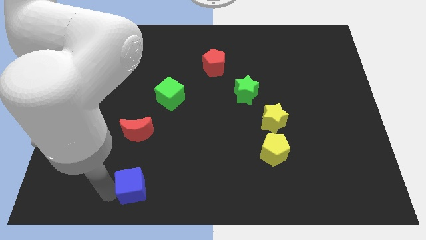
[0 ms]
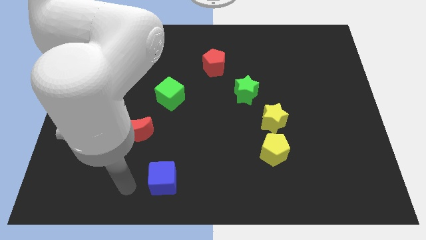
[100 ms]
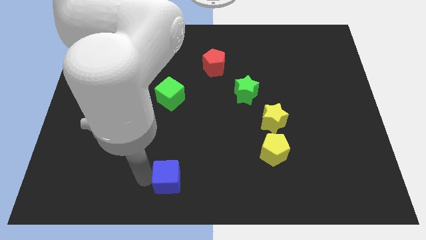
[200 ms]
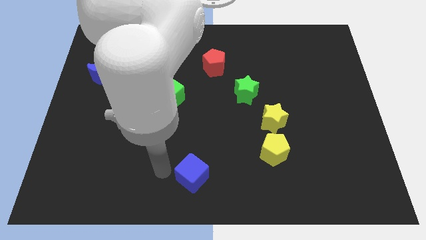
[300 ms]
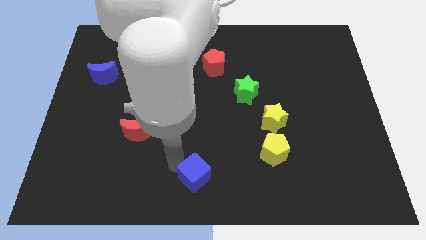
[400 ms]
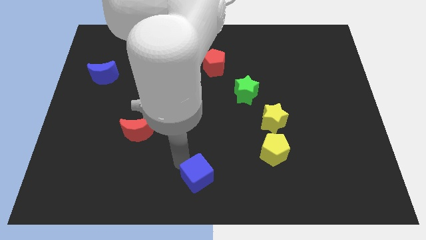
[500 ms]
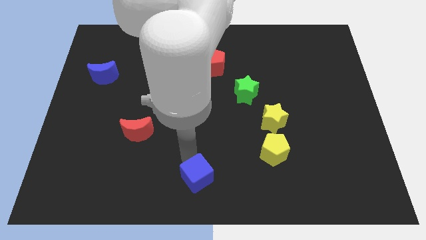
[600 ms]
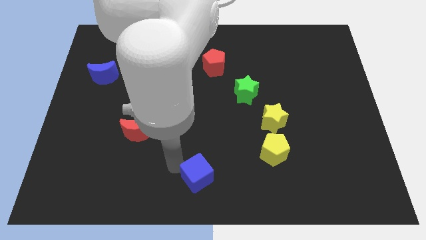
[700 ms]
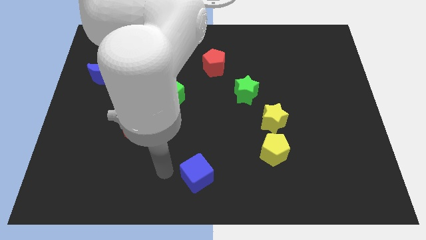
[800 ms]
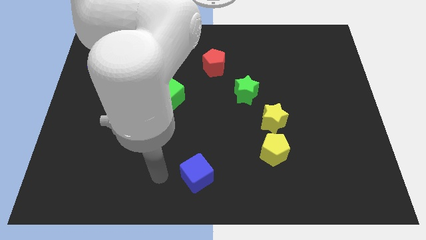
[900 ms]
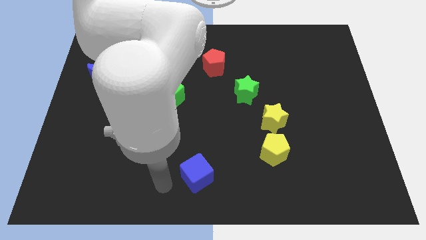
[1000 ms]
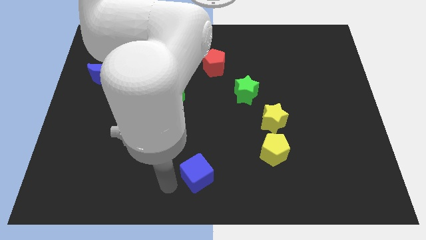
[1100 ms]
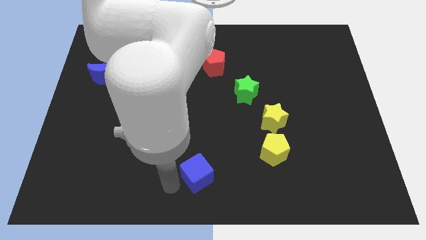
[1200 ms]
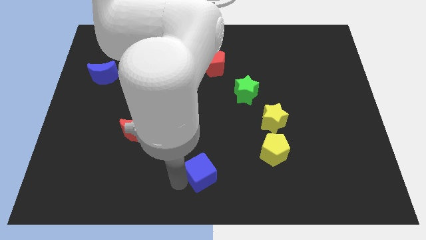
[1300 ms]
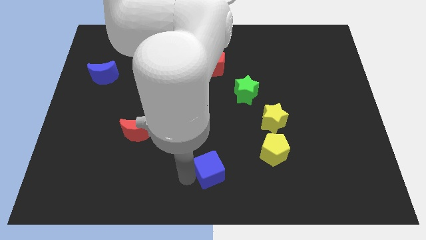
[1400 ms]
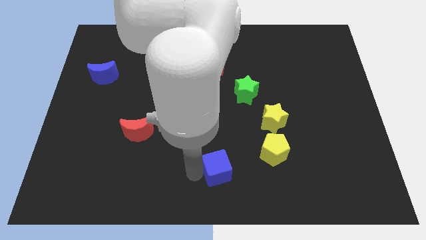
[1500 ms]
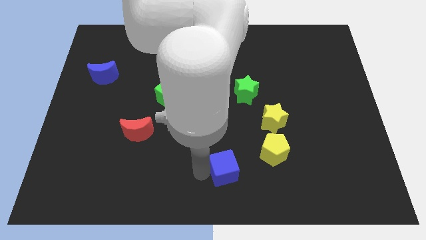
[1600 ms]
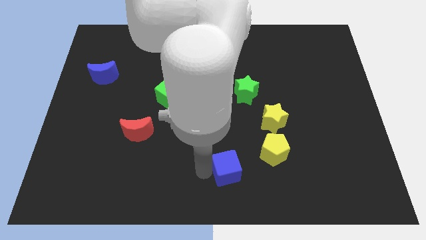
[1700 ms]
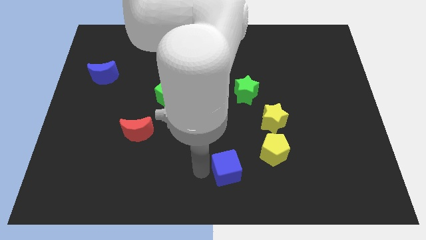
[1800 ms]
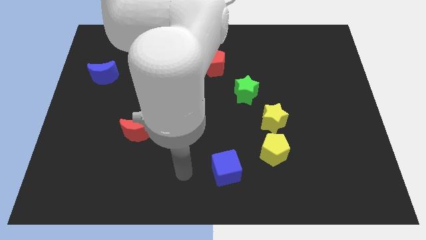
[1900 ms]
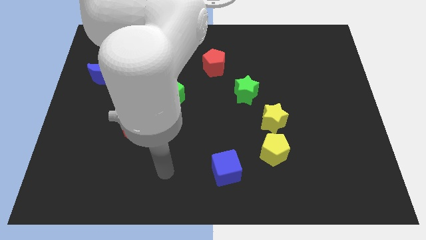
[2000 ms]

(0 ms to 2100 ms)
place the blue cube to the left of the yellow pentagon

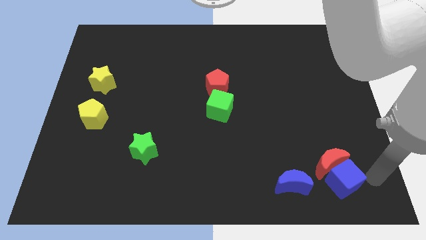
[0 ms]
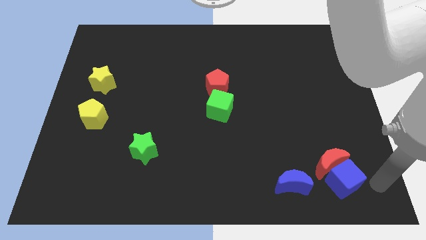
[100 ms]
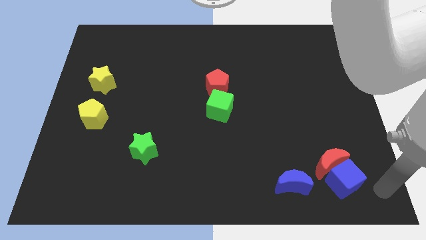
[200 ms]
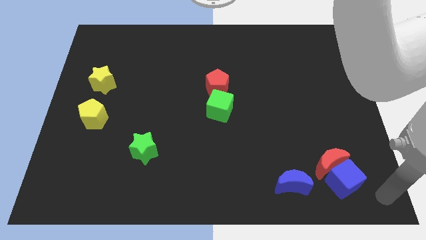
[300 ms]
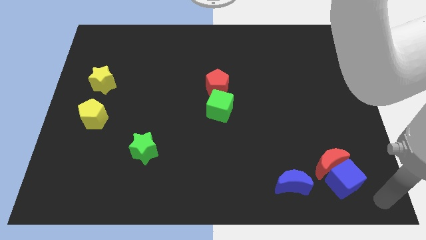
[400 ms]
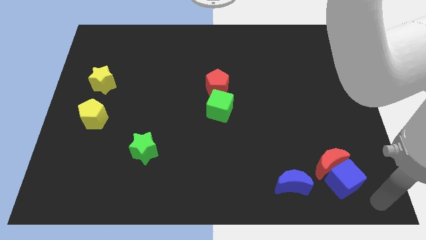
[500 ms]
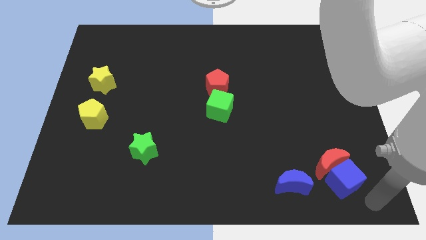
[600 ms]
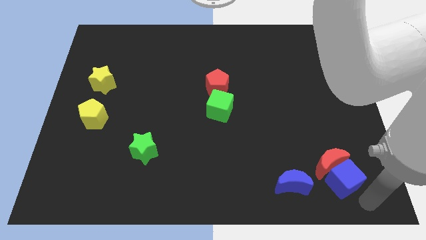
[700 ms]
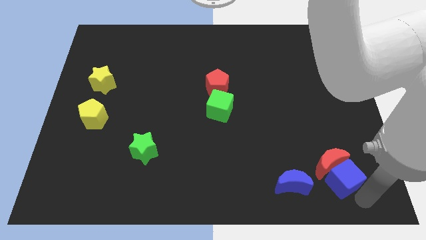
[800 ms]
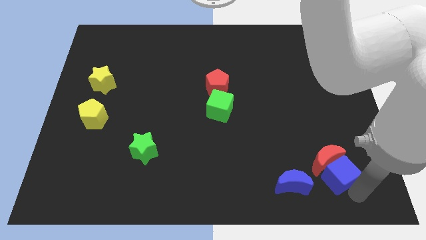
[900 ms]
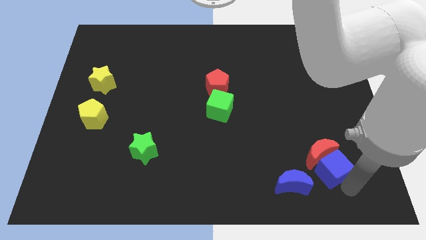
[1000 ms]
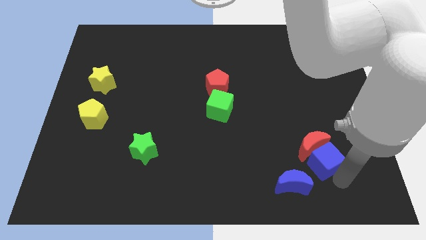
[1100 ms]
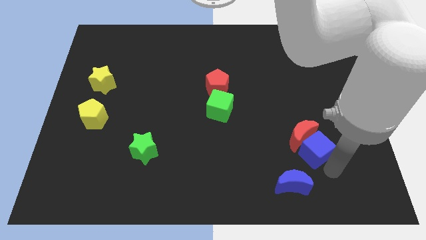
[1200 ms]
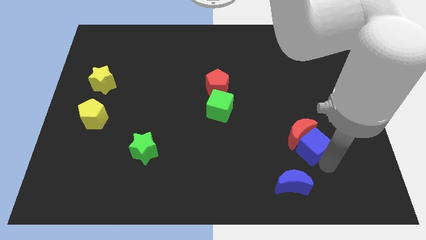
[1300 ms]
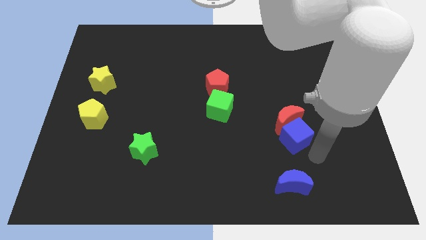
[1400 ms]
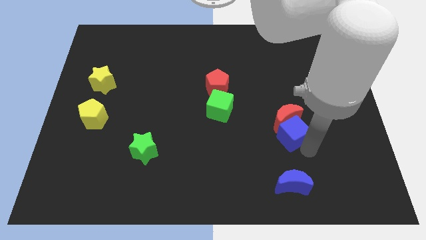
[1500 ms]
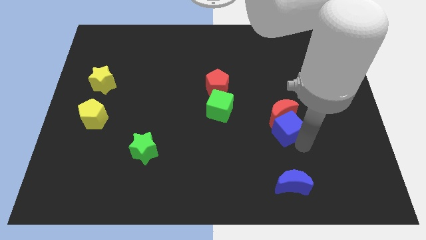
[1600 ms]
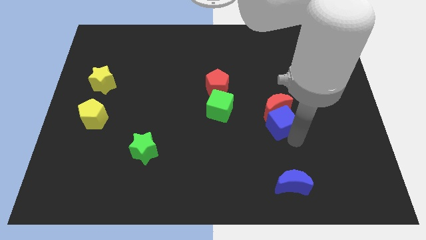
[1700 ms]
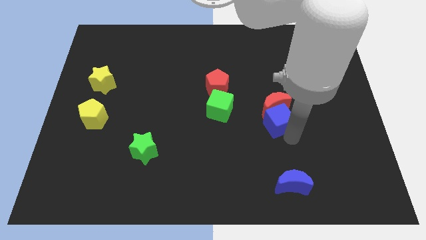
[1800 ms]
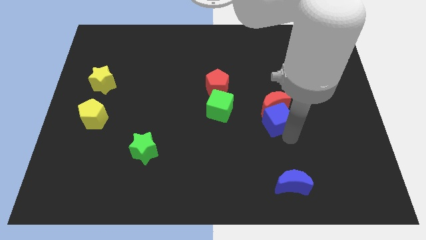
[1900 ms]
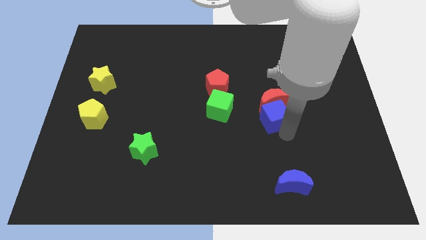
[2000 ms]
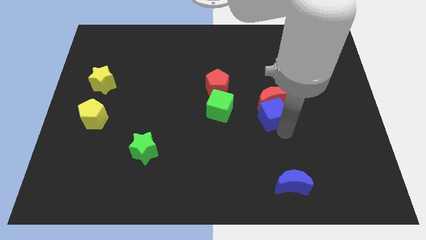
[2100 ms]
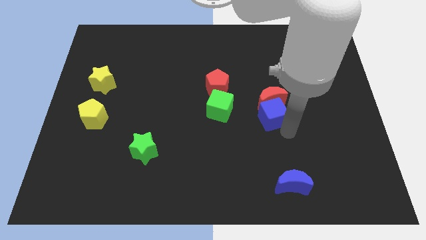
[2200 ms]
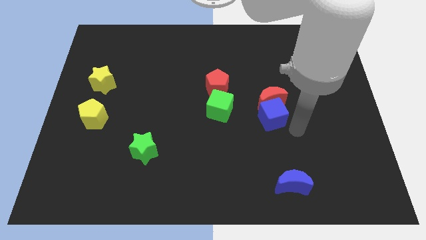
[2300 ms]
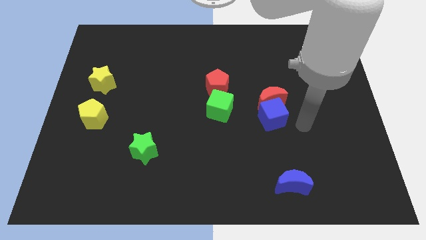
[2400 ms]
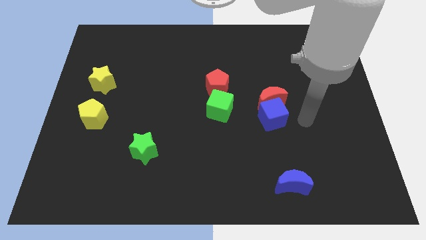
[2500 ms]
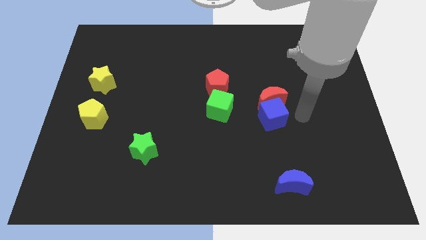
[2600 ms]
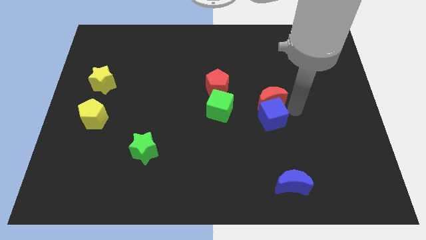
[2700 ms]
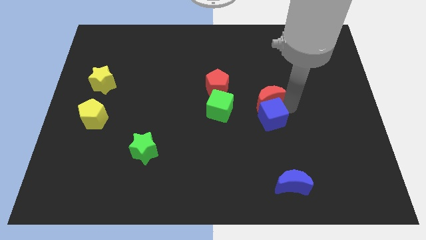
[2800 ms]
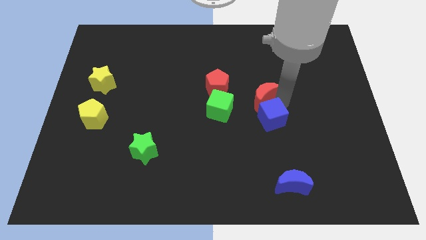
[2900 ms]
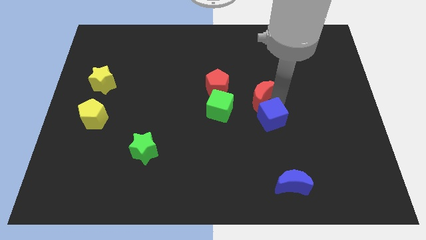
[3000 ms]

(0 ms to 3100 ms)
push the blue cube and red crescent to the right side of green cube

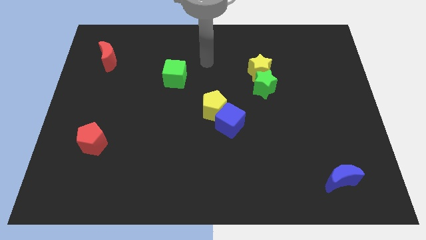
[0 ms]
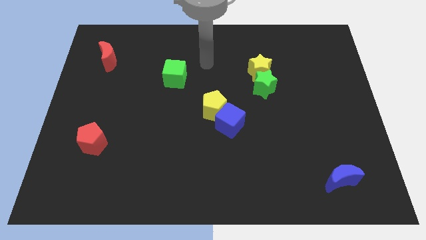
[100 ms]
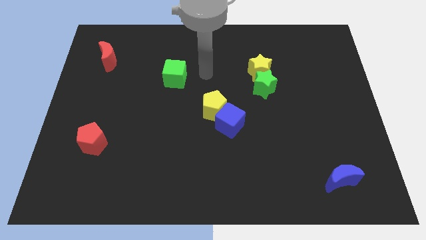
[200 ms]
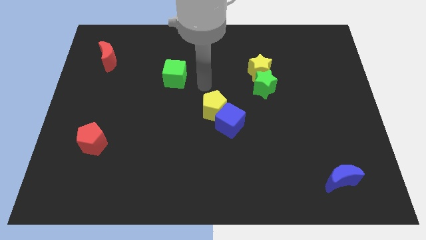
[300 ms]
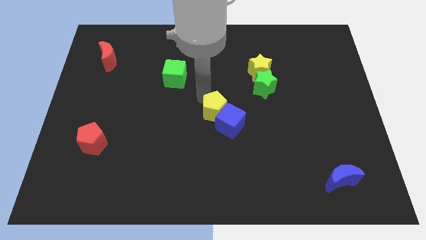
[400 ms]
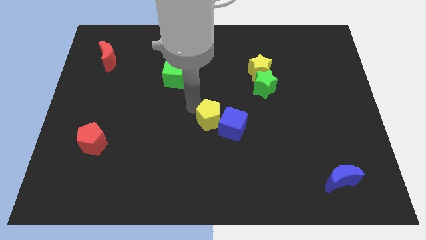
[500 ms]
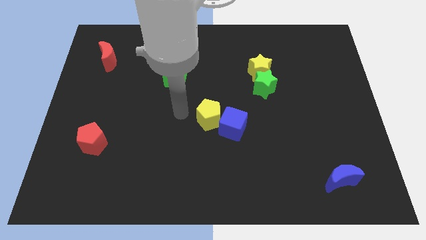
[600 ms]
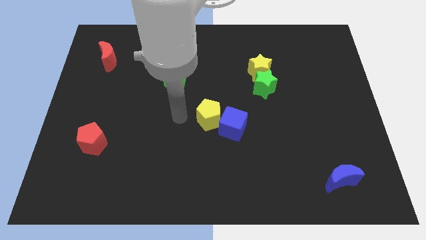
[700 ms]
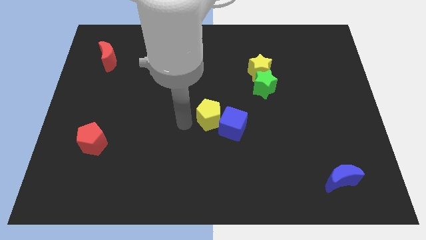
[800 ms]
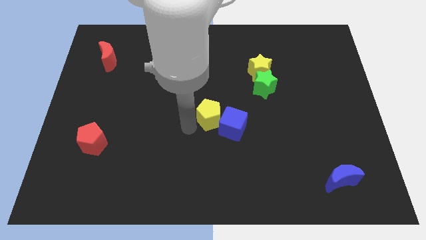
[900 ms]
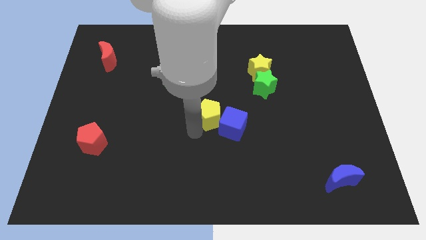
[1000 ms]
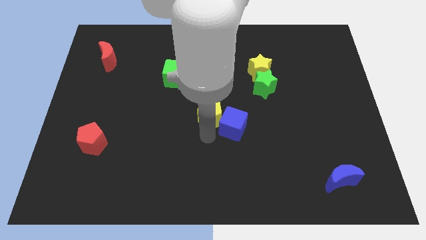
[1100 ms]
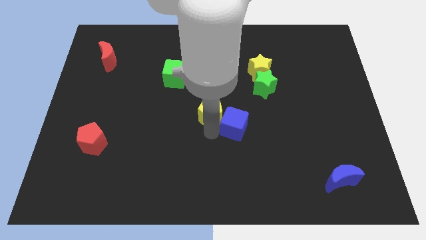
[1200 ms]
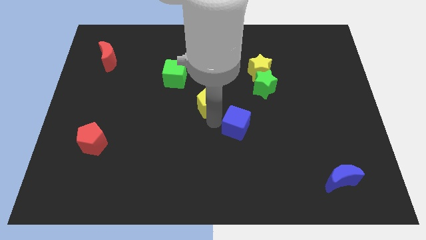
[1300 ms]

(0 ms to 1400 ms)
go and separate the yellow pentagon from the blue cube

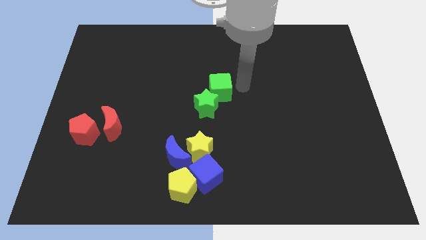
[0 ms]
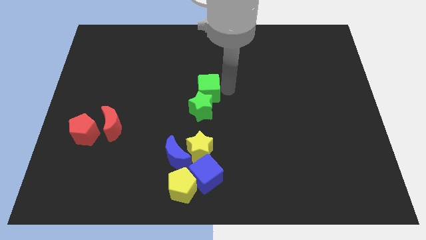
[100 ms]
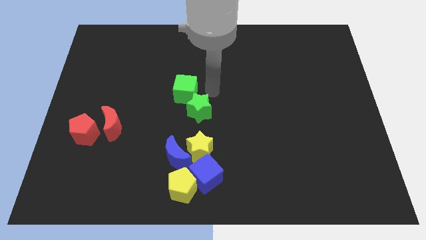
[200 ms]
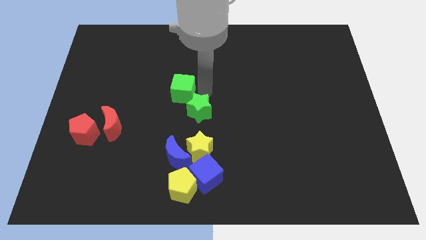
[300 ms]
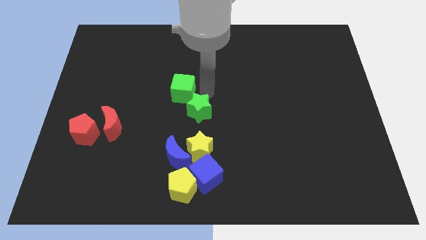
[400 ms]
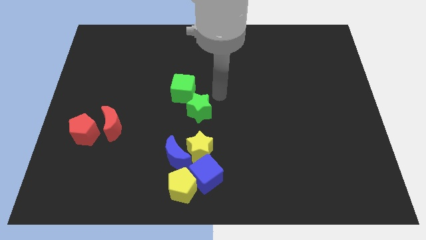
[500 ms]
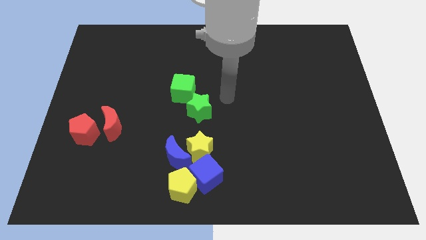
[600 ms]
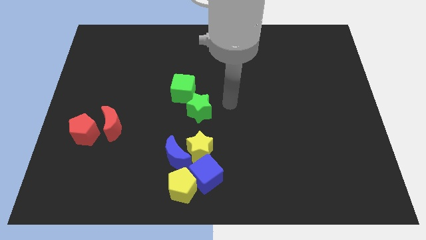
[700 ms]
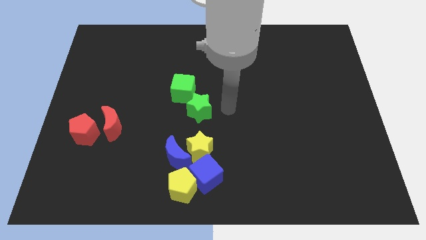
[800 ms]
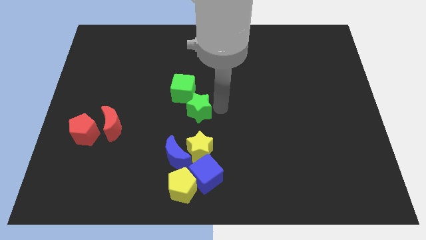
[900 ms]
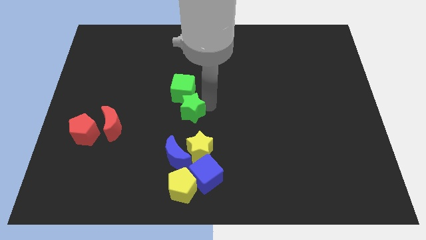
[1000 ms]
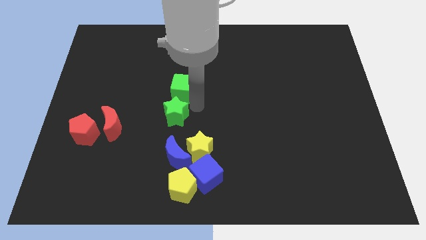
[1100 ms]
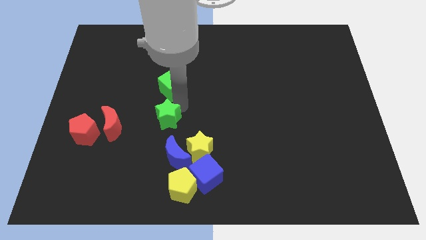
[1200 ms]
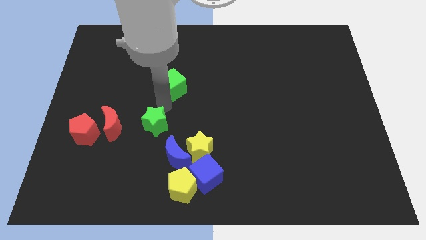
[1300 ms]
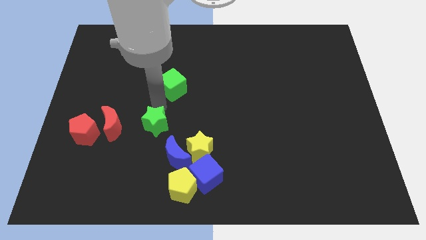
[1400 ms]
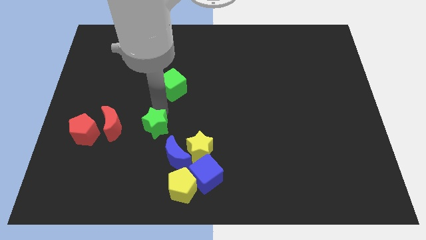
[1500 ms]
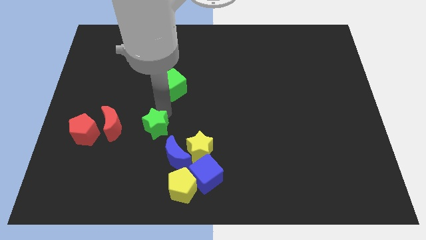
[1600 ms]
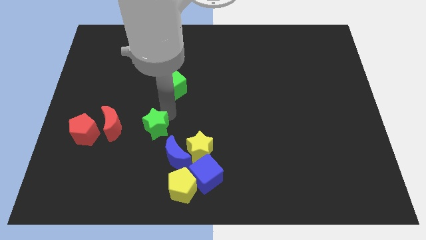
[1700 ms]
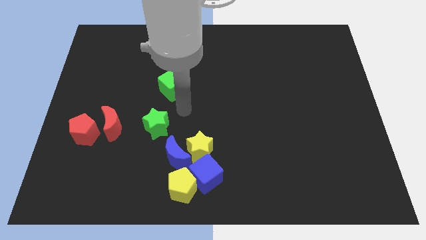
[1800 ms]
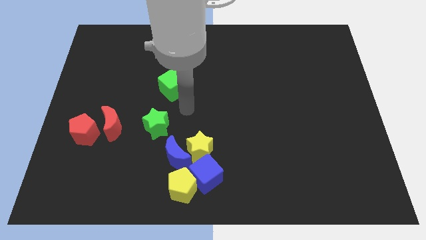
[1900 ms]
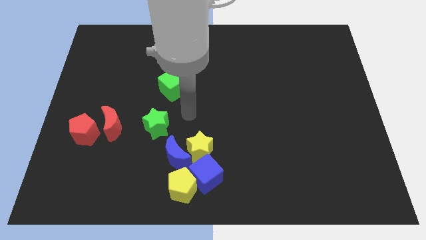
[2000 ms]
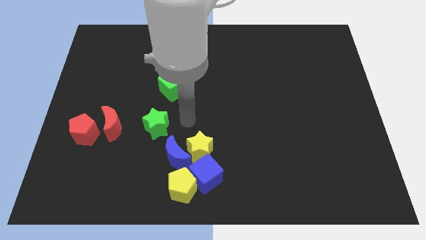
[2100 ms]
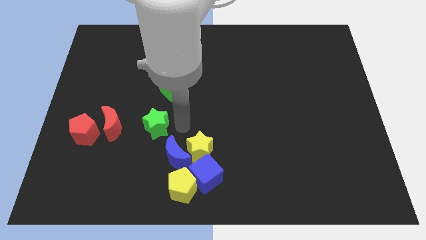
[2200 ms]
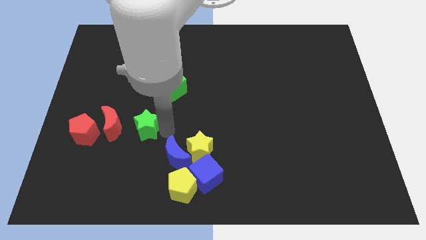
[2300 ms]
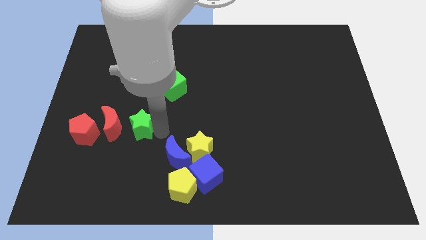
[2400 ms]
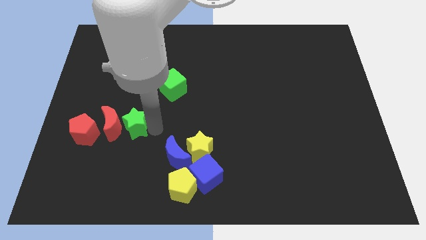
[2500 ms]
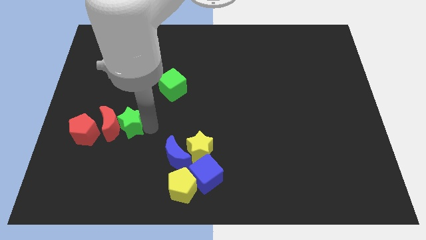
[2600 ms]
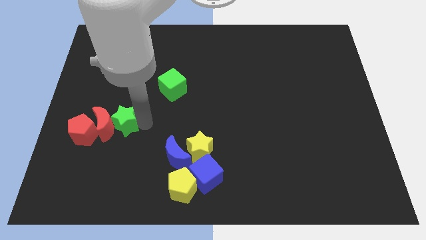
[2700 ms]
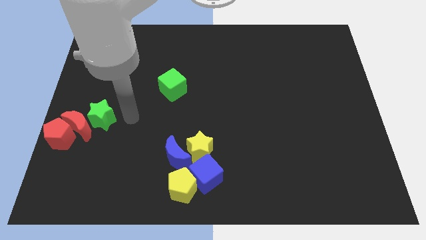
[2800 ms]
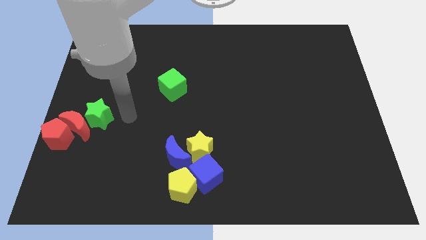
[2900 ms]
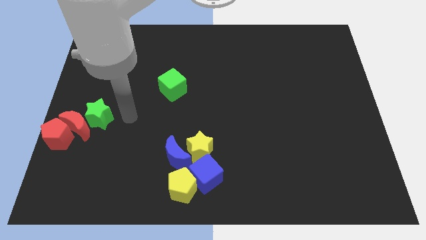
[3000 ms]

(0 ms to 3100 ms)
push the green star on diagonally top right of the red crescent
